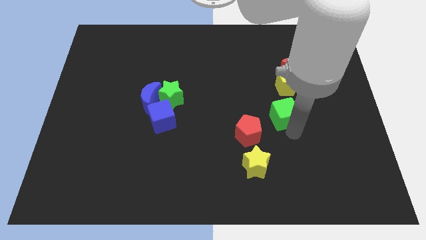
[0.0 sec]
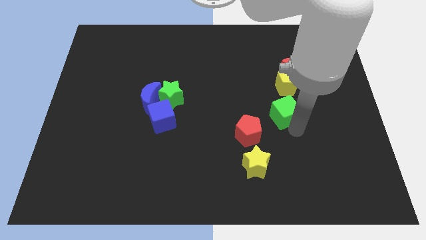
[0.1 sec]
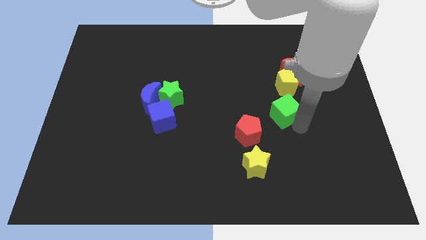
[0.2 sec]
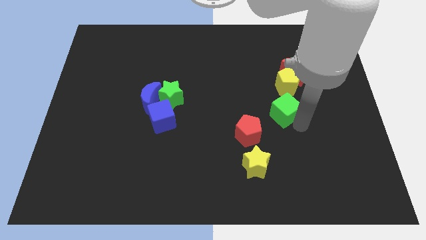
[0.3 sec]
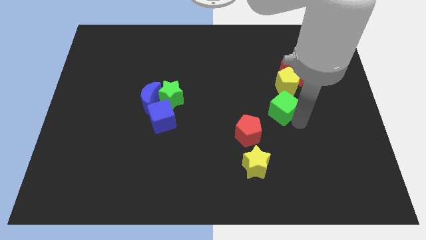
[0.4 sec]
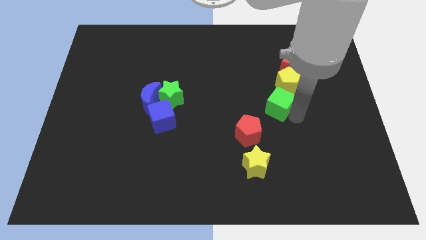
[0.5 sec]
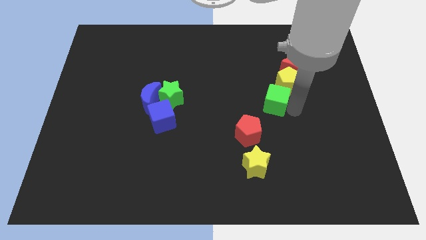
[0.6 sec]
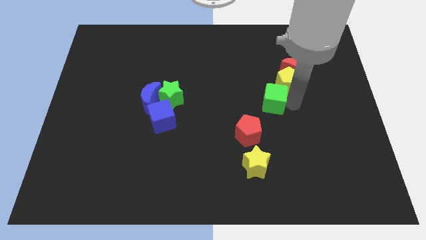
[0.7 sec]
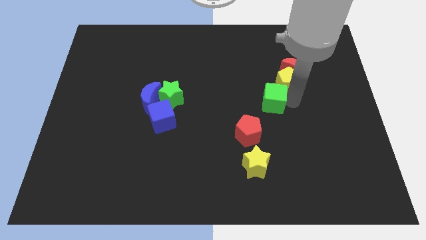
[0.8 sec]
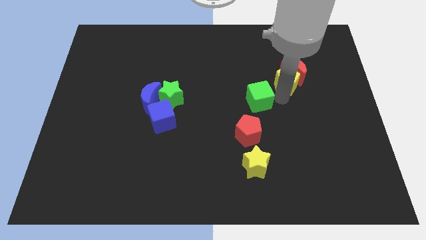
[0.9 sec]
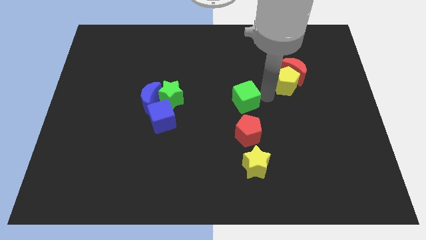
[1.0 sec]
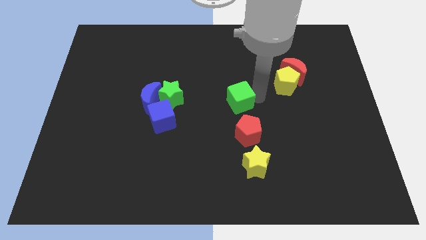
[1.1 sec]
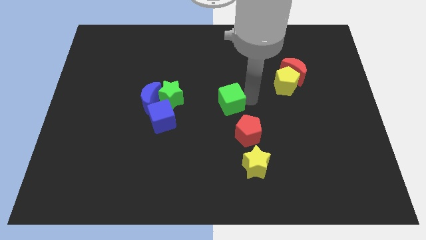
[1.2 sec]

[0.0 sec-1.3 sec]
move the green cube diagonal to the red pentagon

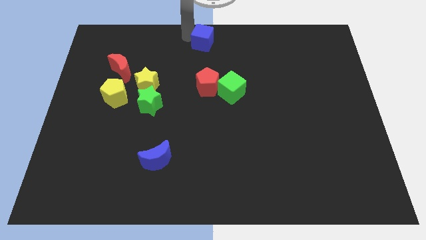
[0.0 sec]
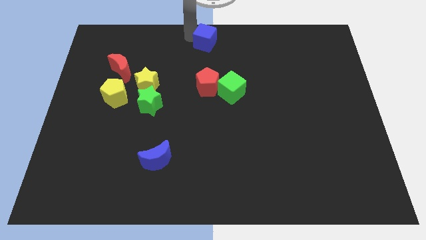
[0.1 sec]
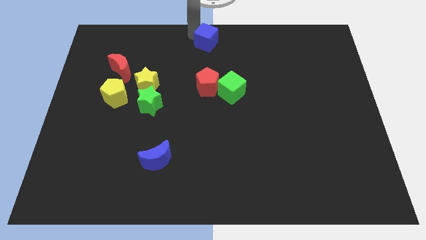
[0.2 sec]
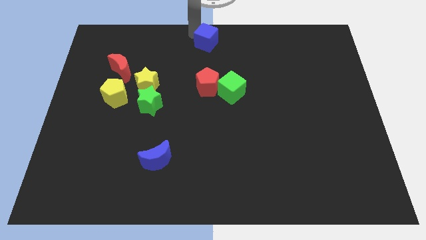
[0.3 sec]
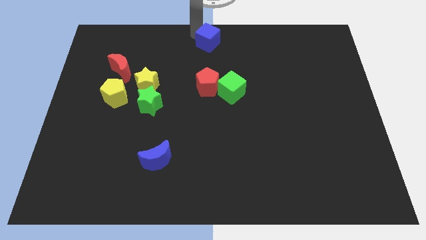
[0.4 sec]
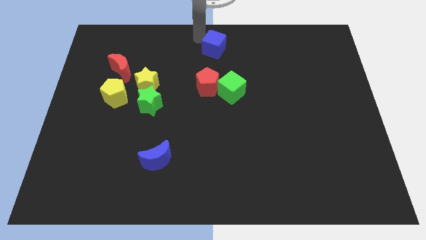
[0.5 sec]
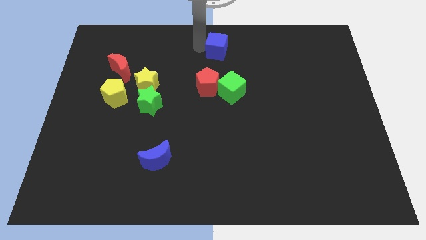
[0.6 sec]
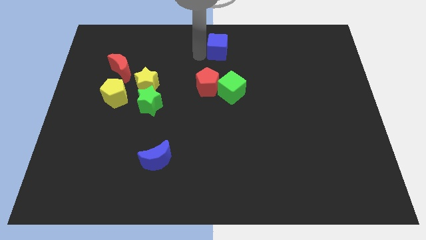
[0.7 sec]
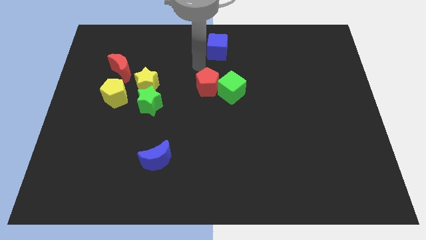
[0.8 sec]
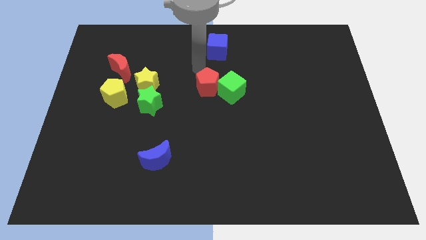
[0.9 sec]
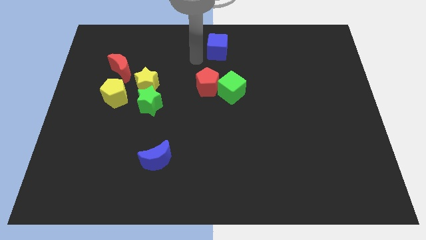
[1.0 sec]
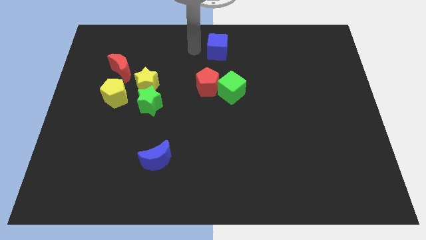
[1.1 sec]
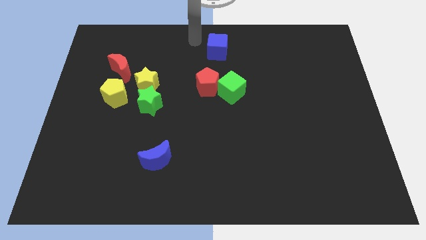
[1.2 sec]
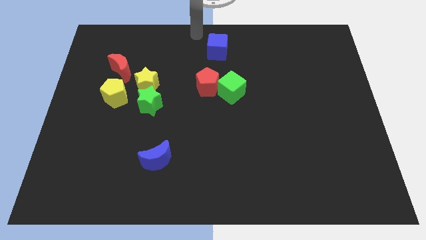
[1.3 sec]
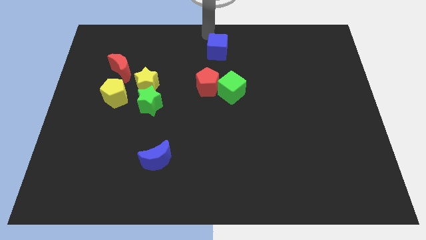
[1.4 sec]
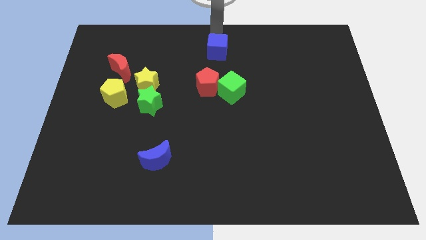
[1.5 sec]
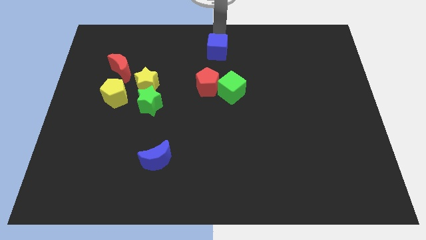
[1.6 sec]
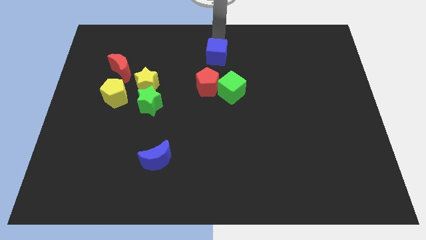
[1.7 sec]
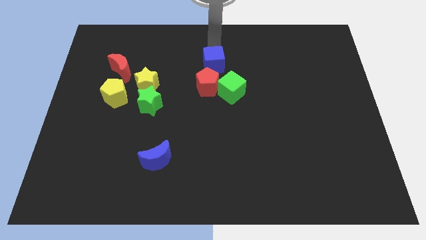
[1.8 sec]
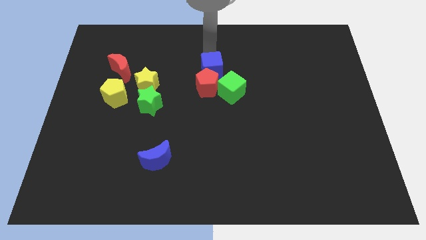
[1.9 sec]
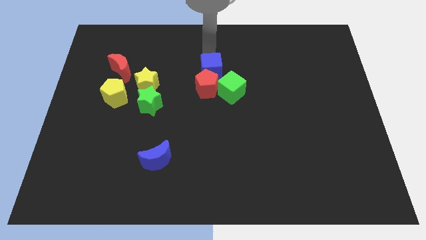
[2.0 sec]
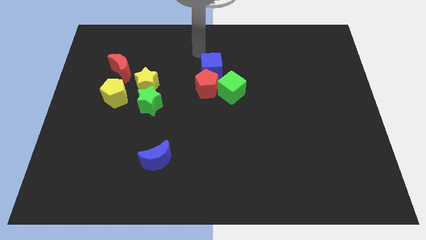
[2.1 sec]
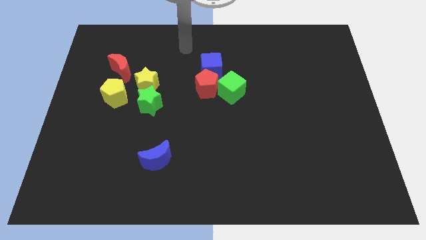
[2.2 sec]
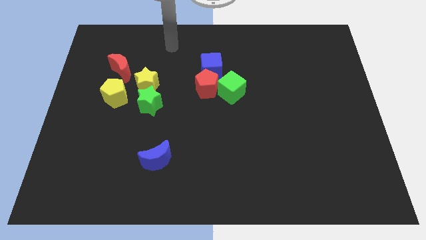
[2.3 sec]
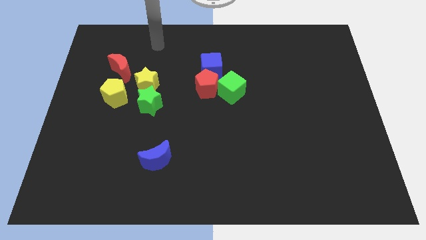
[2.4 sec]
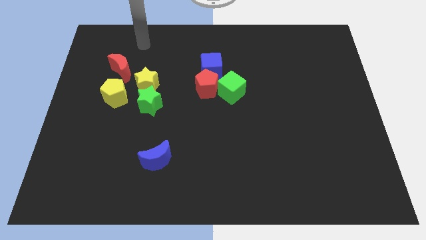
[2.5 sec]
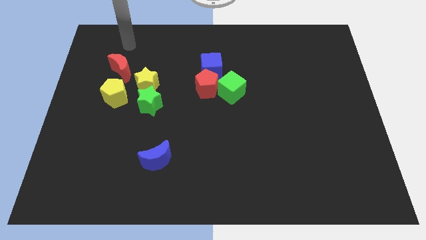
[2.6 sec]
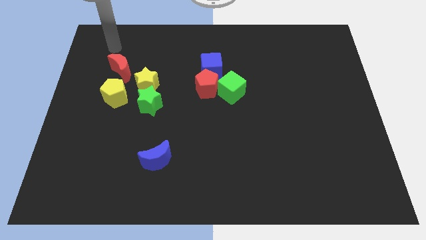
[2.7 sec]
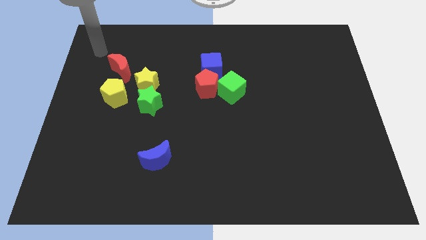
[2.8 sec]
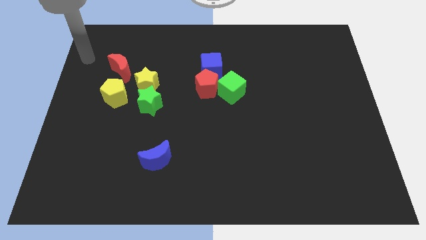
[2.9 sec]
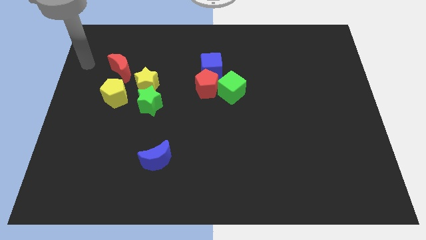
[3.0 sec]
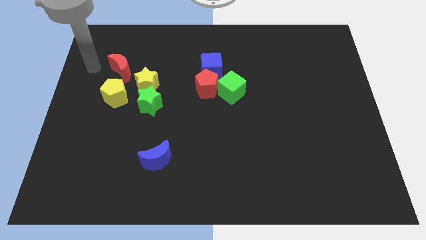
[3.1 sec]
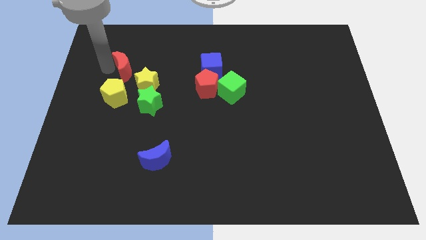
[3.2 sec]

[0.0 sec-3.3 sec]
slide the blue cube into the red pentagon

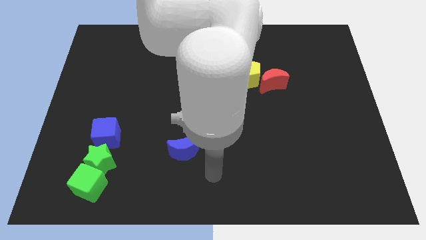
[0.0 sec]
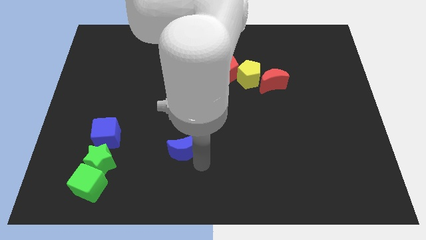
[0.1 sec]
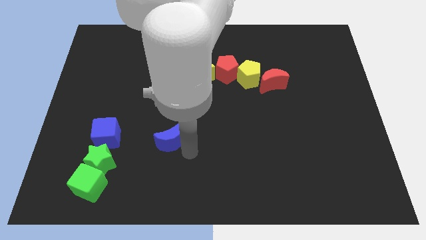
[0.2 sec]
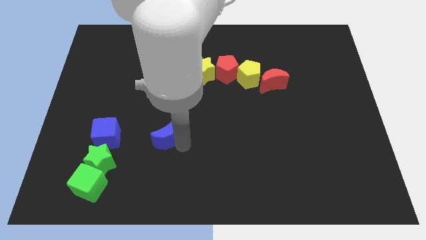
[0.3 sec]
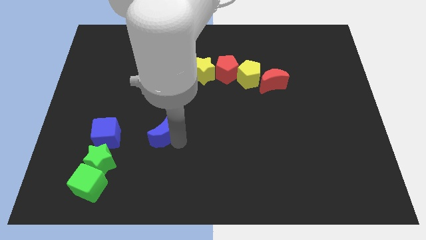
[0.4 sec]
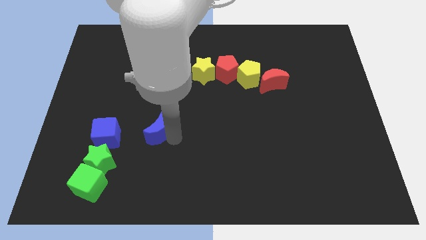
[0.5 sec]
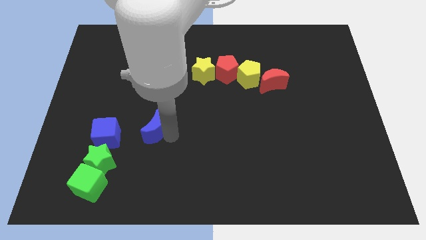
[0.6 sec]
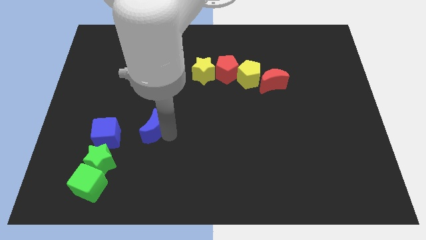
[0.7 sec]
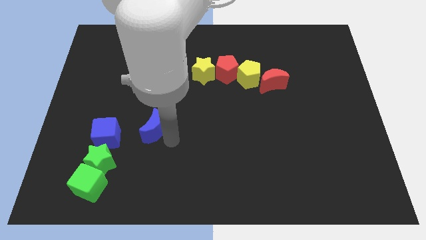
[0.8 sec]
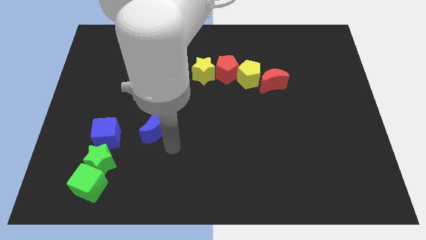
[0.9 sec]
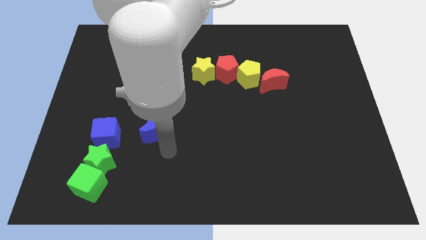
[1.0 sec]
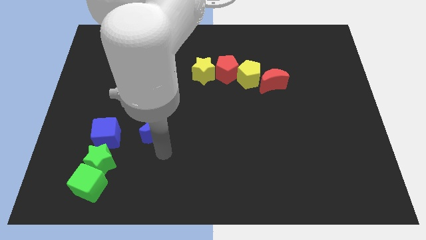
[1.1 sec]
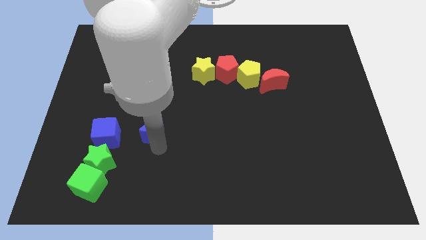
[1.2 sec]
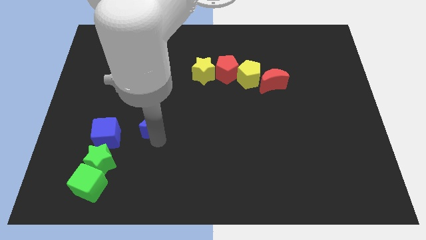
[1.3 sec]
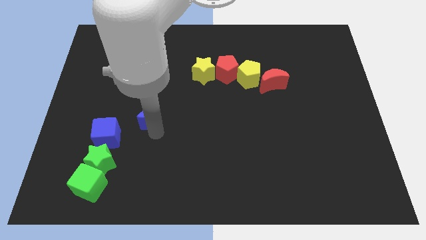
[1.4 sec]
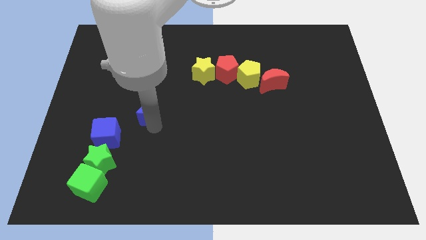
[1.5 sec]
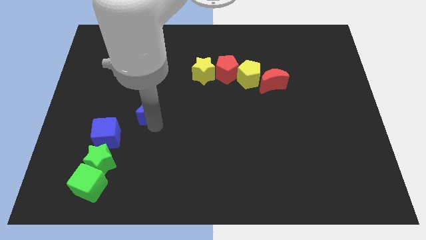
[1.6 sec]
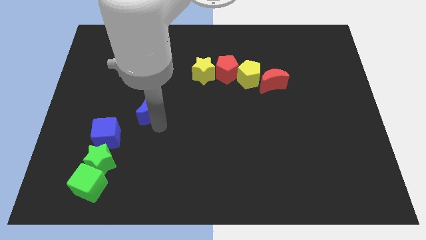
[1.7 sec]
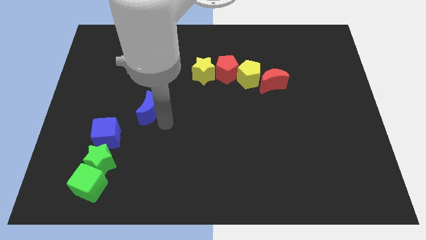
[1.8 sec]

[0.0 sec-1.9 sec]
push the blue crescent towards the top right of the blue cube

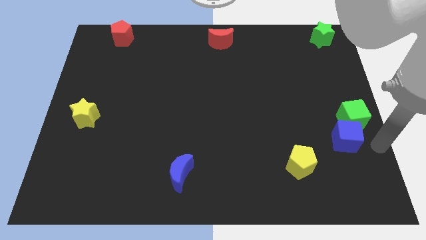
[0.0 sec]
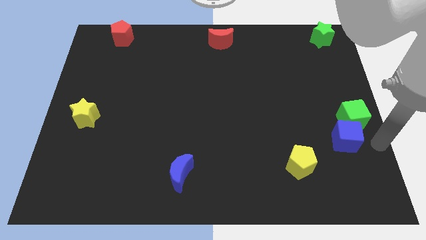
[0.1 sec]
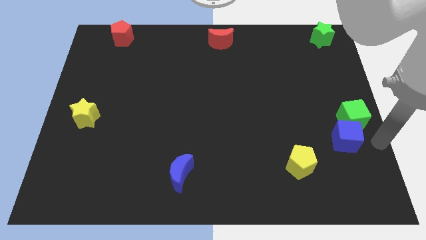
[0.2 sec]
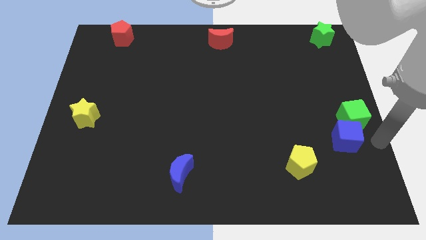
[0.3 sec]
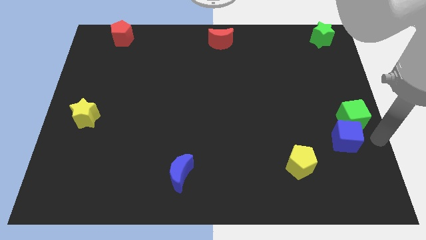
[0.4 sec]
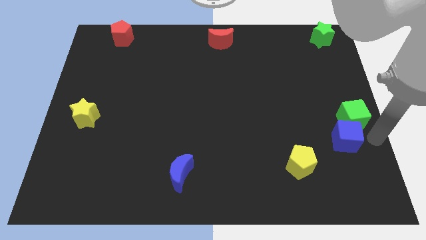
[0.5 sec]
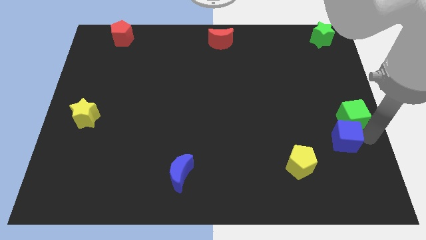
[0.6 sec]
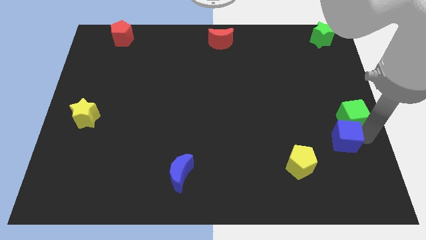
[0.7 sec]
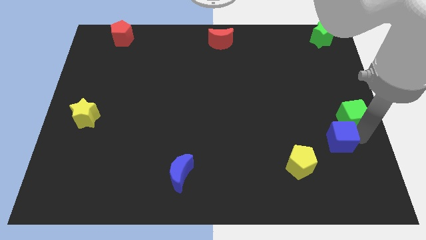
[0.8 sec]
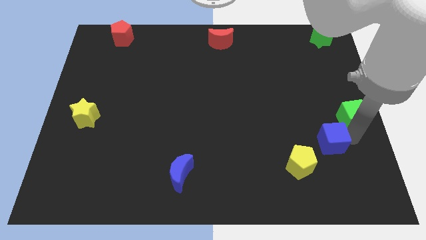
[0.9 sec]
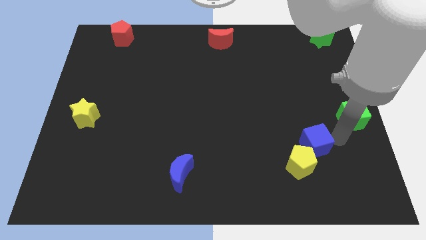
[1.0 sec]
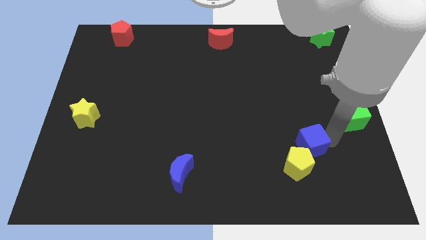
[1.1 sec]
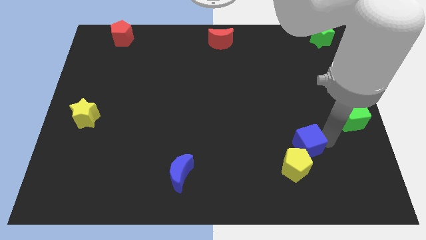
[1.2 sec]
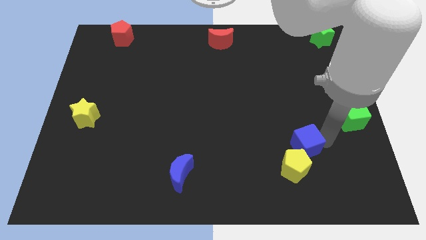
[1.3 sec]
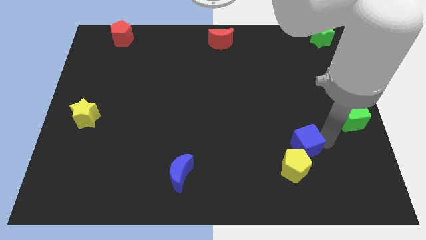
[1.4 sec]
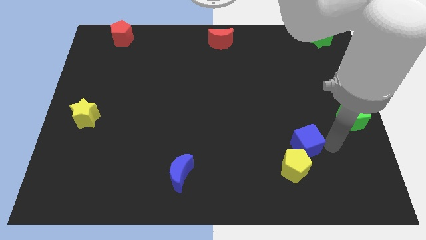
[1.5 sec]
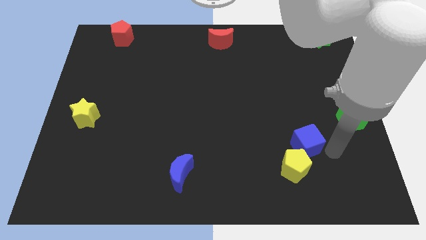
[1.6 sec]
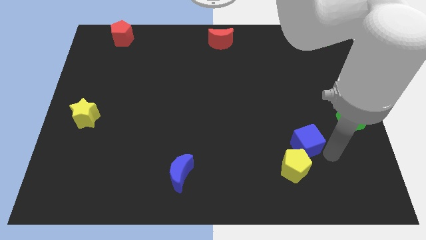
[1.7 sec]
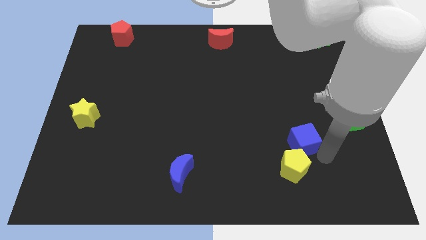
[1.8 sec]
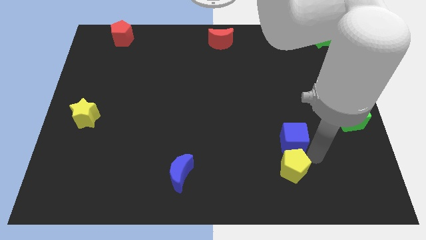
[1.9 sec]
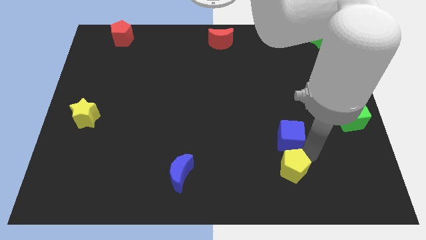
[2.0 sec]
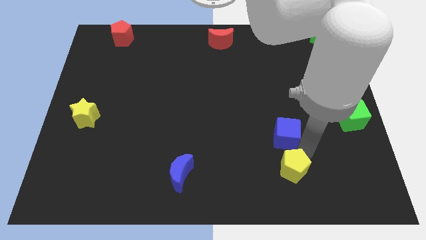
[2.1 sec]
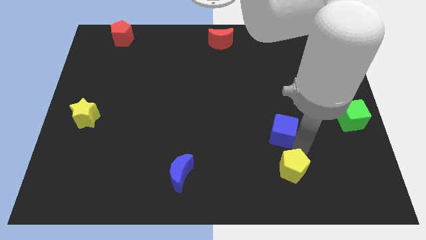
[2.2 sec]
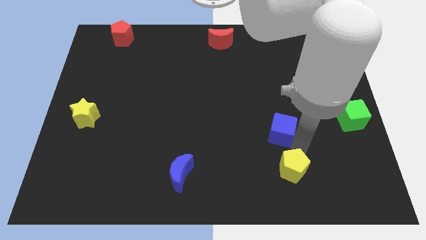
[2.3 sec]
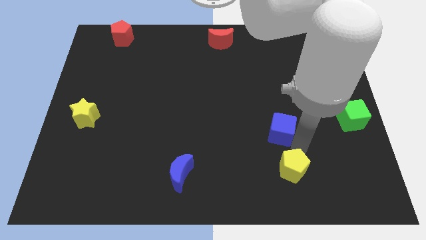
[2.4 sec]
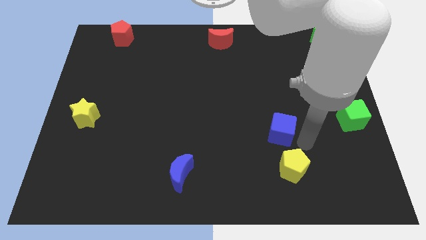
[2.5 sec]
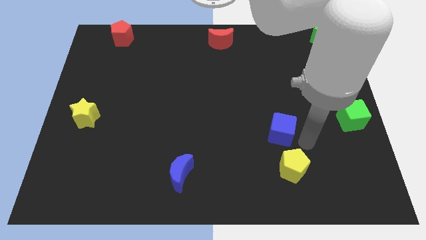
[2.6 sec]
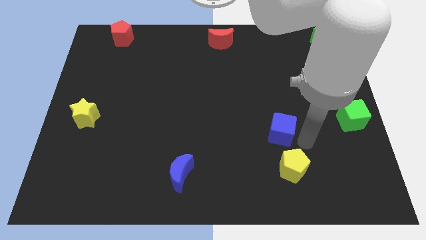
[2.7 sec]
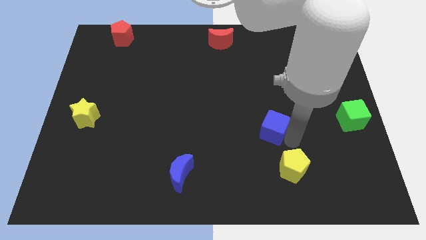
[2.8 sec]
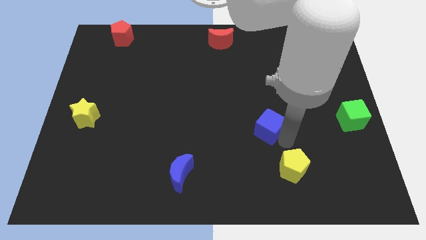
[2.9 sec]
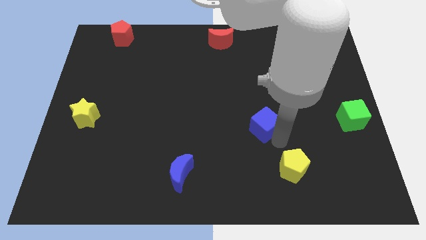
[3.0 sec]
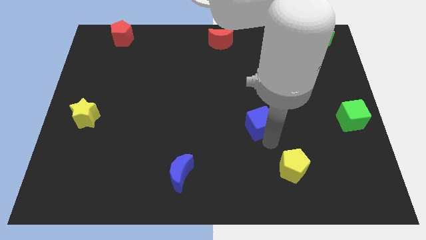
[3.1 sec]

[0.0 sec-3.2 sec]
separate the blue cube from the green cube
